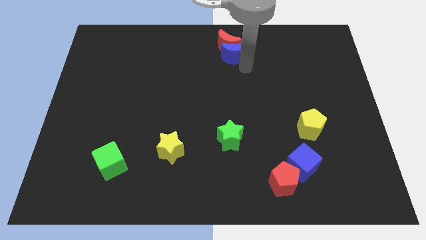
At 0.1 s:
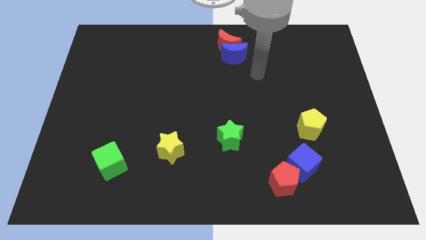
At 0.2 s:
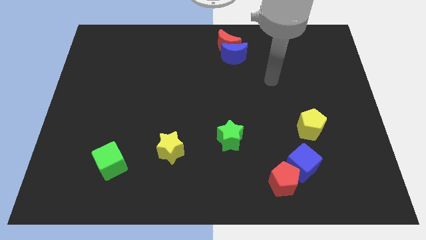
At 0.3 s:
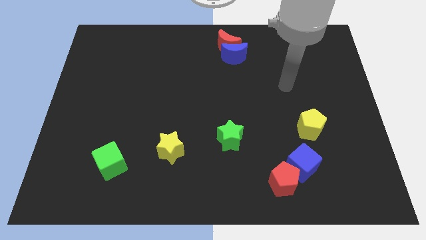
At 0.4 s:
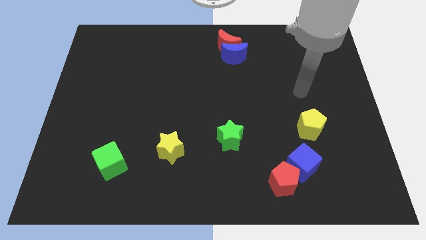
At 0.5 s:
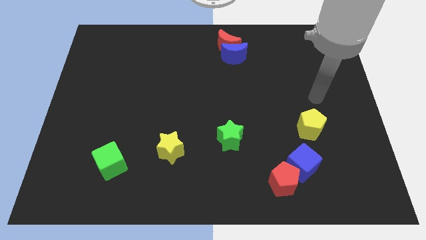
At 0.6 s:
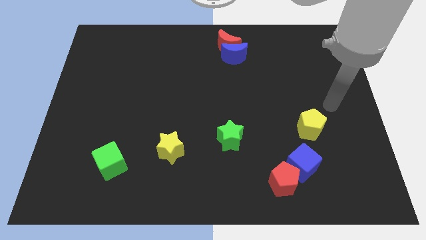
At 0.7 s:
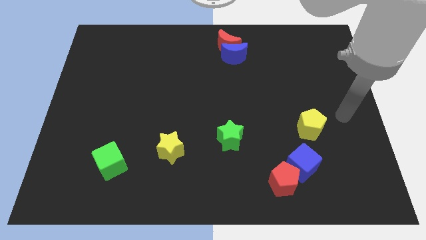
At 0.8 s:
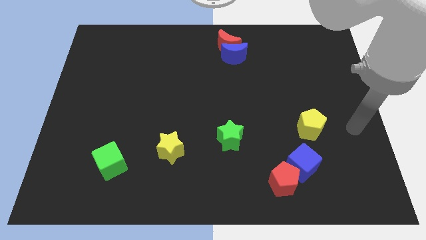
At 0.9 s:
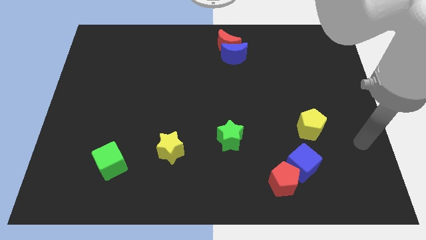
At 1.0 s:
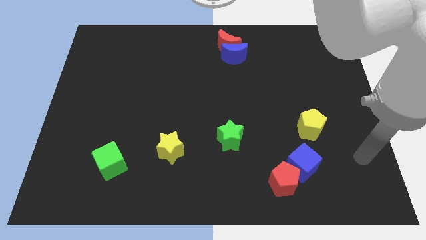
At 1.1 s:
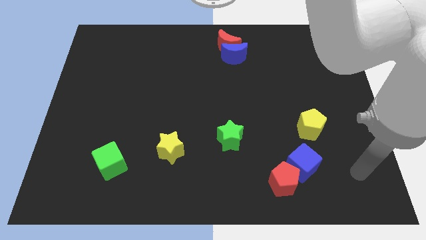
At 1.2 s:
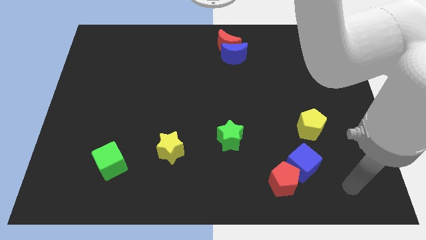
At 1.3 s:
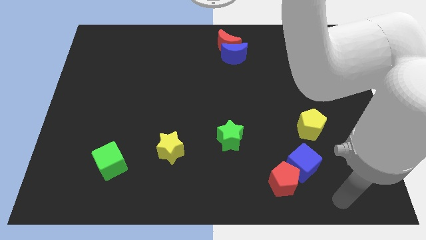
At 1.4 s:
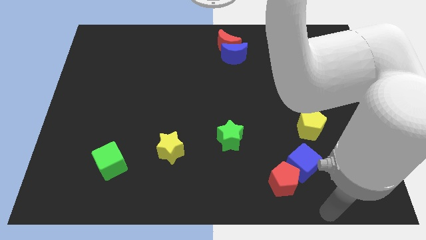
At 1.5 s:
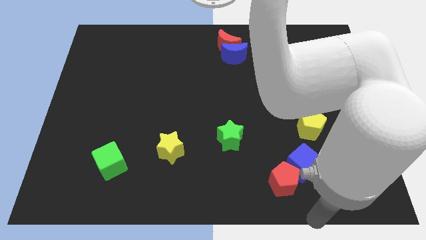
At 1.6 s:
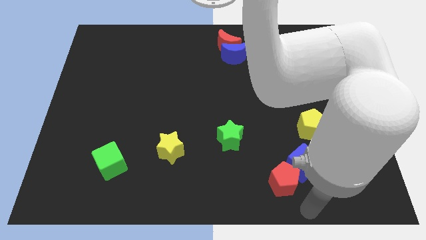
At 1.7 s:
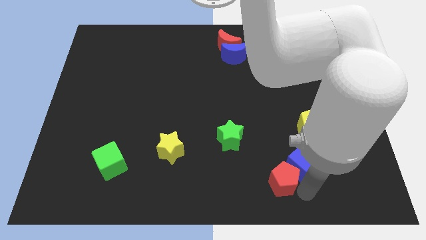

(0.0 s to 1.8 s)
place your arm at the bottom of the blue cube

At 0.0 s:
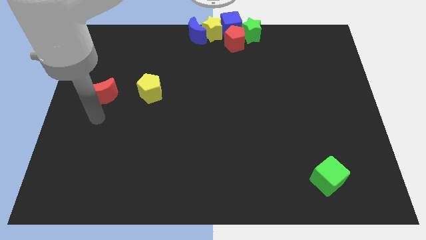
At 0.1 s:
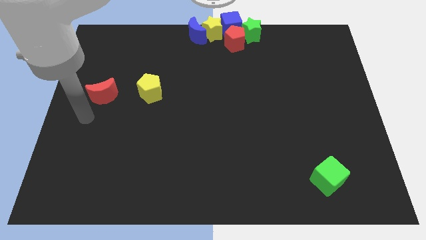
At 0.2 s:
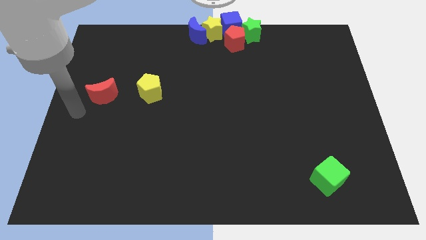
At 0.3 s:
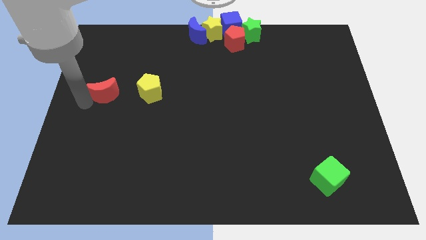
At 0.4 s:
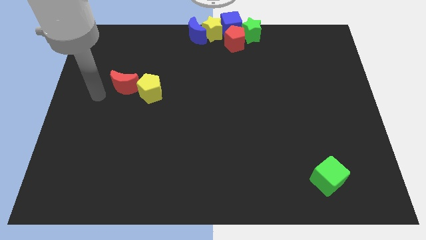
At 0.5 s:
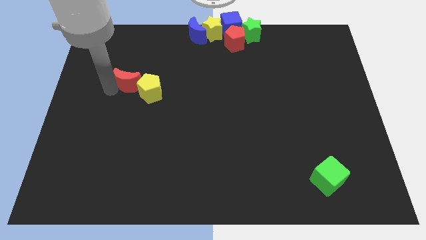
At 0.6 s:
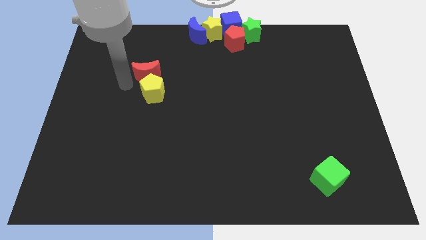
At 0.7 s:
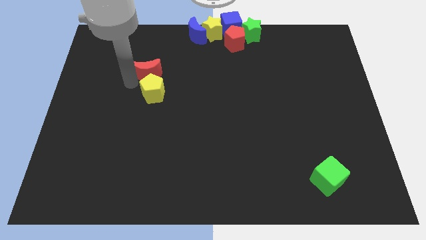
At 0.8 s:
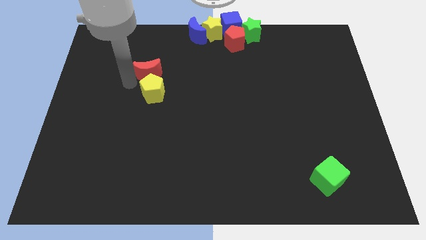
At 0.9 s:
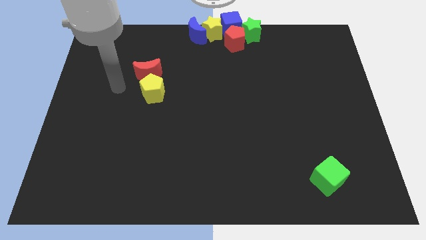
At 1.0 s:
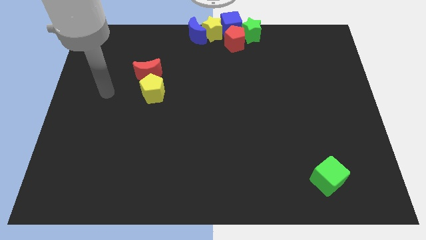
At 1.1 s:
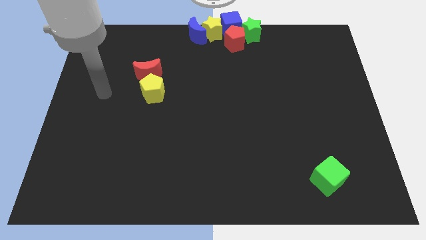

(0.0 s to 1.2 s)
place the red crescent above the yellow pentagon

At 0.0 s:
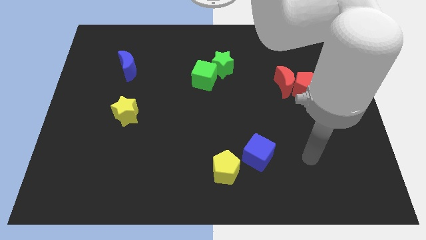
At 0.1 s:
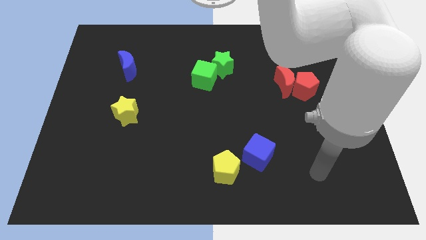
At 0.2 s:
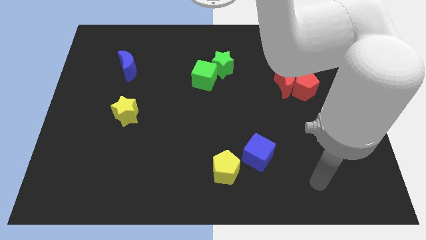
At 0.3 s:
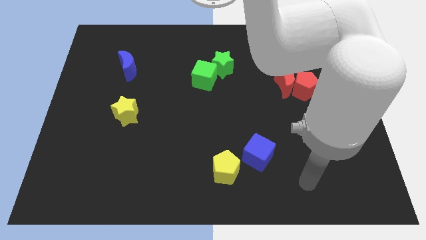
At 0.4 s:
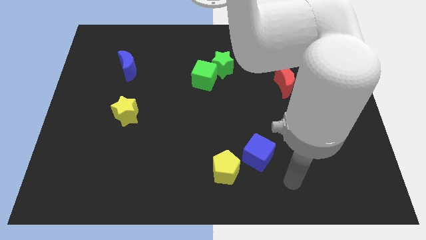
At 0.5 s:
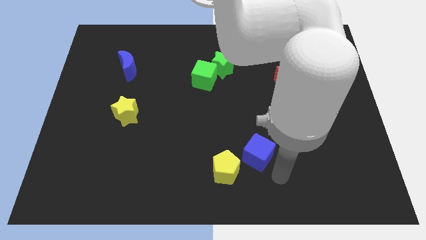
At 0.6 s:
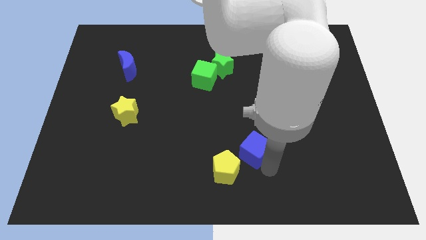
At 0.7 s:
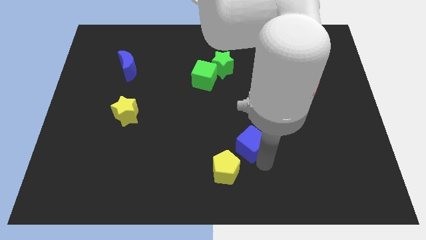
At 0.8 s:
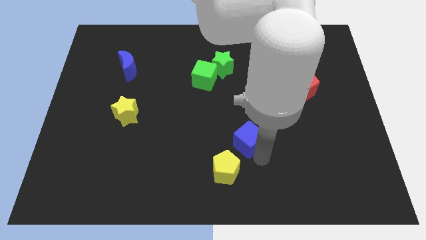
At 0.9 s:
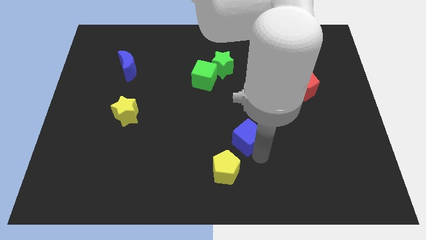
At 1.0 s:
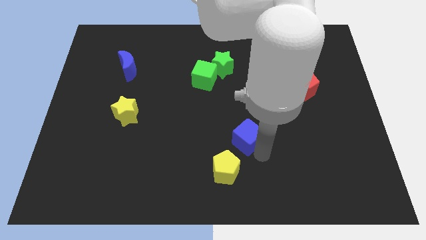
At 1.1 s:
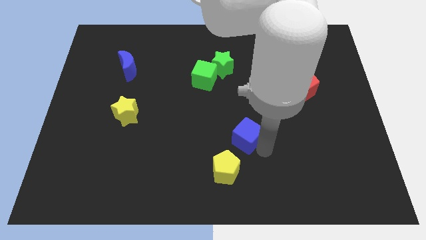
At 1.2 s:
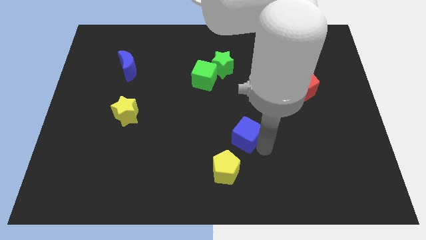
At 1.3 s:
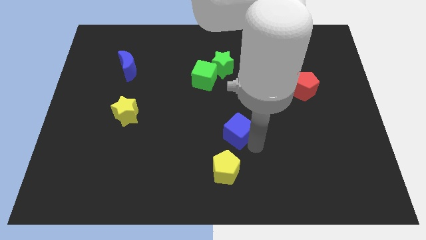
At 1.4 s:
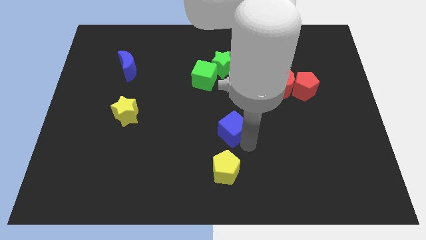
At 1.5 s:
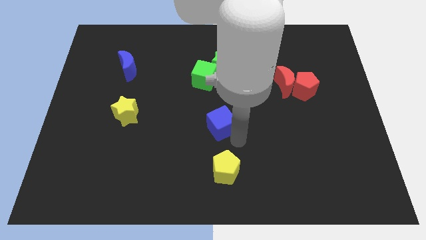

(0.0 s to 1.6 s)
put the blue cube above the yellow pentagon

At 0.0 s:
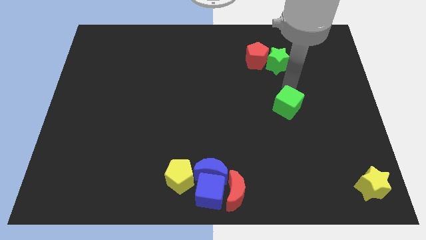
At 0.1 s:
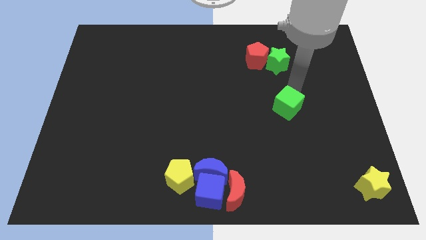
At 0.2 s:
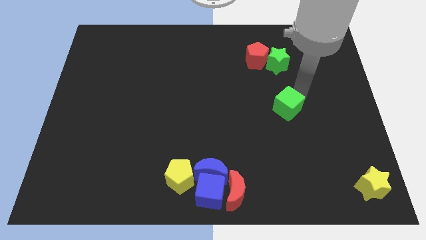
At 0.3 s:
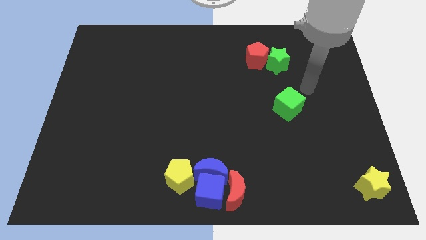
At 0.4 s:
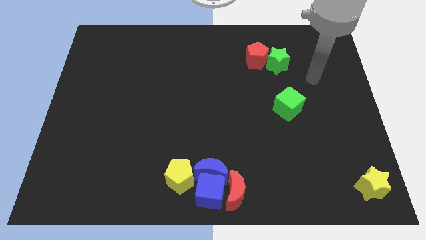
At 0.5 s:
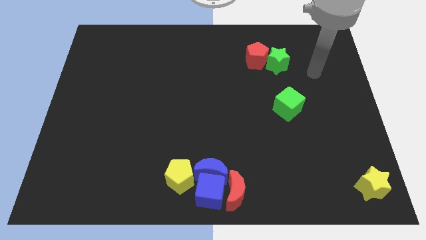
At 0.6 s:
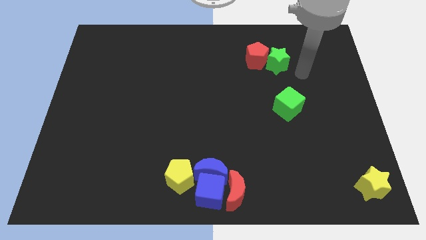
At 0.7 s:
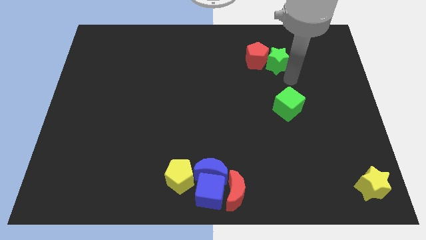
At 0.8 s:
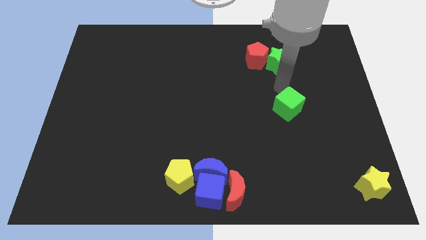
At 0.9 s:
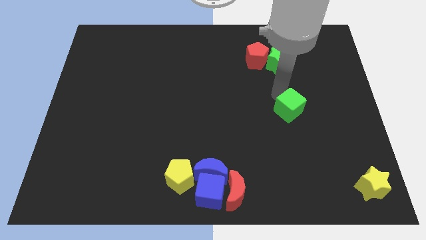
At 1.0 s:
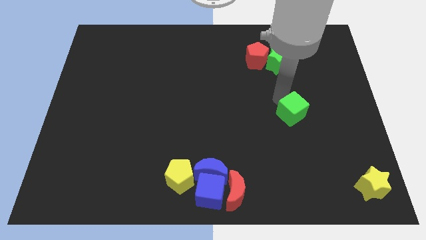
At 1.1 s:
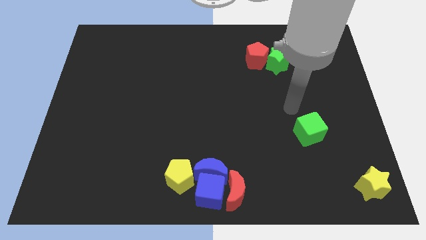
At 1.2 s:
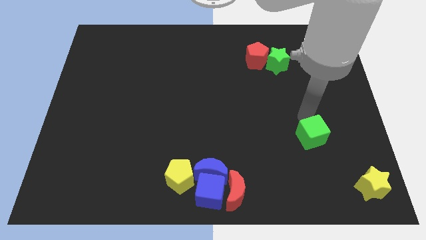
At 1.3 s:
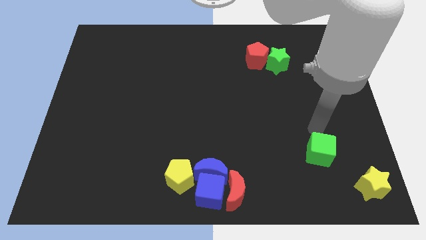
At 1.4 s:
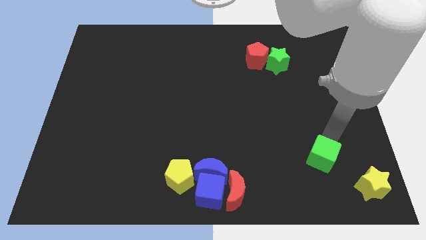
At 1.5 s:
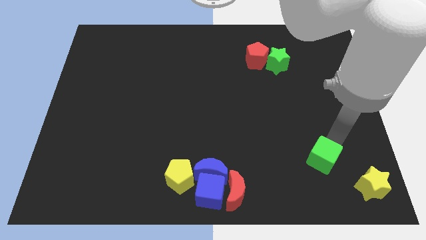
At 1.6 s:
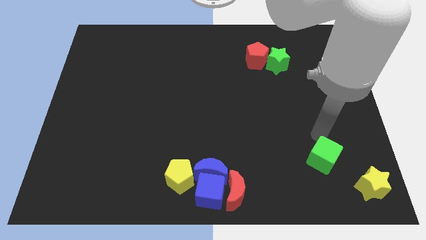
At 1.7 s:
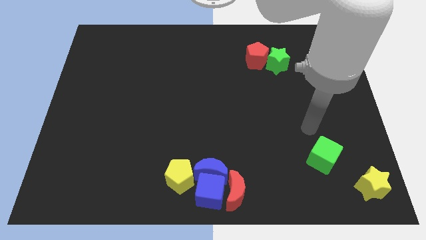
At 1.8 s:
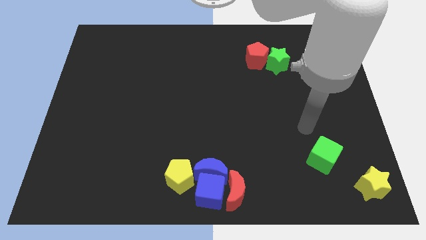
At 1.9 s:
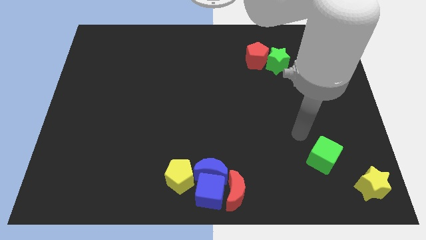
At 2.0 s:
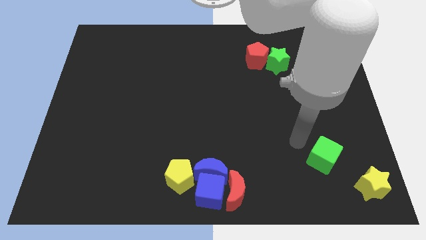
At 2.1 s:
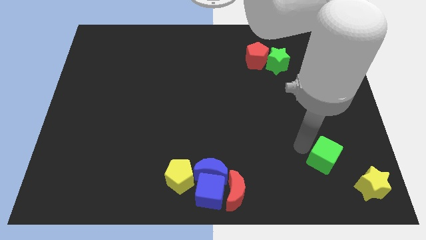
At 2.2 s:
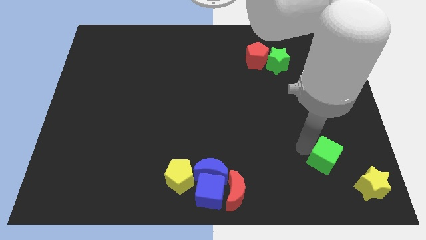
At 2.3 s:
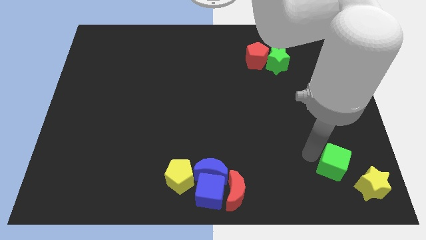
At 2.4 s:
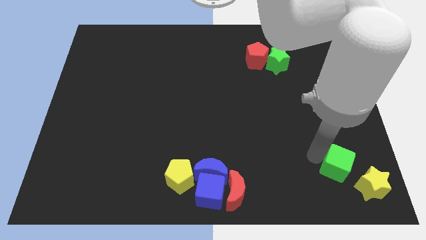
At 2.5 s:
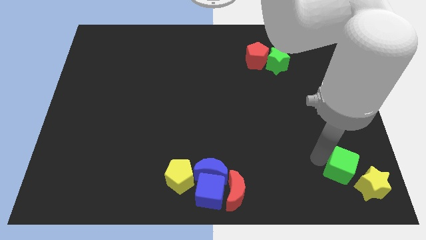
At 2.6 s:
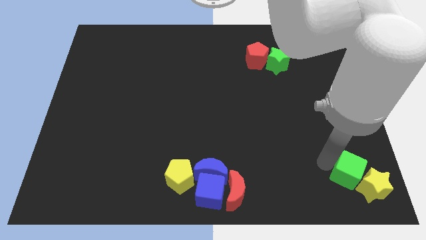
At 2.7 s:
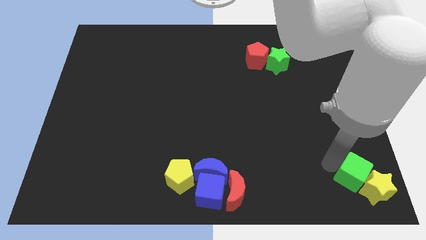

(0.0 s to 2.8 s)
push the green cube into yellow star

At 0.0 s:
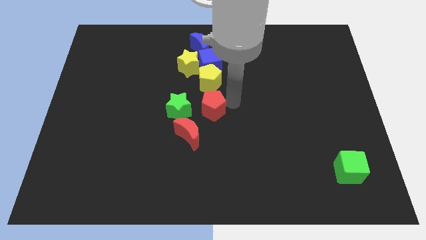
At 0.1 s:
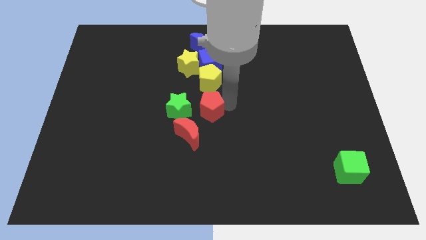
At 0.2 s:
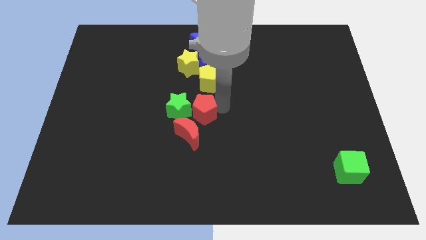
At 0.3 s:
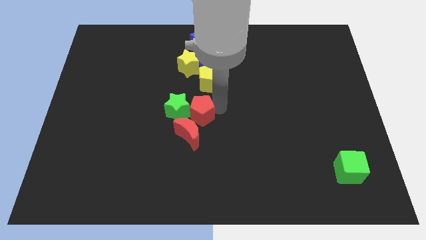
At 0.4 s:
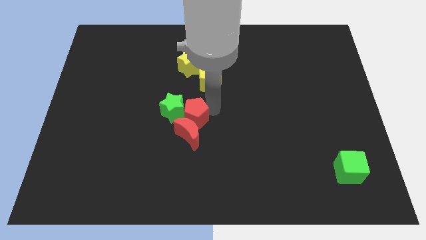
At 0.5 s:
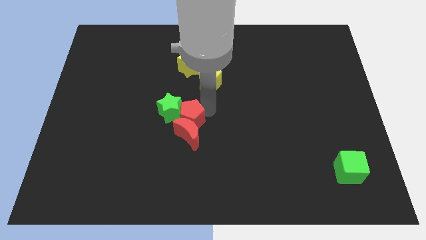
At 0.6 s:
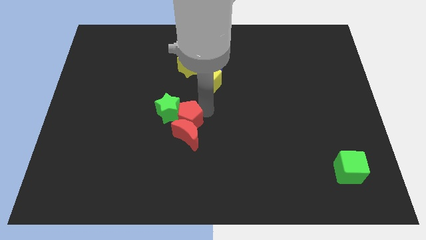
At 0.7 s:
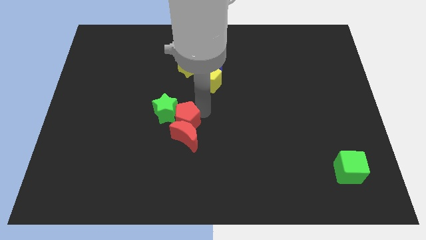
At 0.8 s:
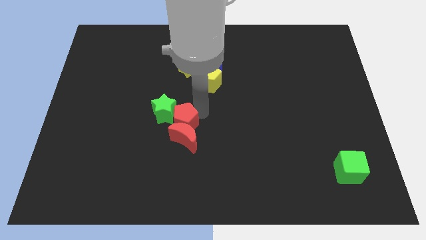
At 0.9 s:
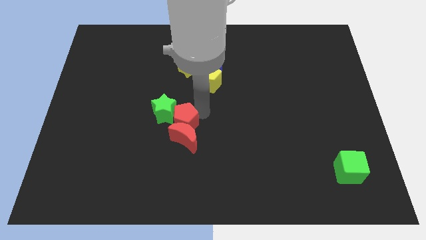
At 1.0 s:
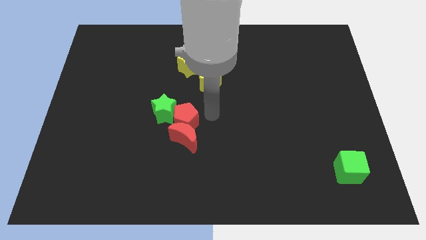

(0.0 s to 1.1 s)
push the green star and red moon with the red pentagon

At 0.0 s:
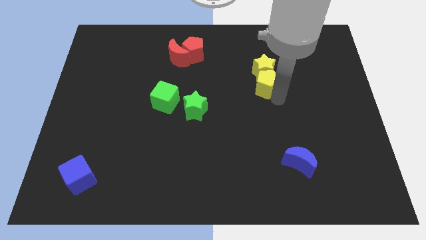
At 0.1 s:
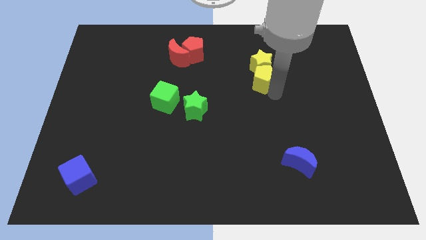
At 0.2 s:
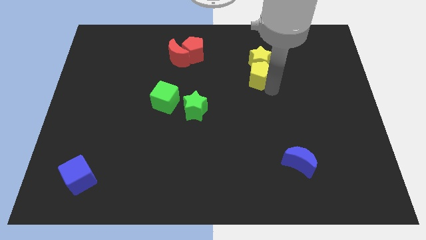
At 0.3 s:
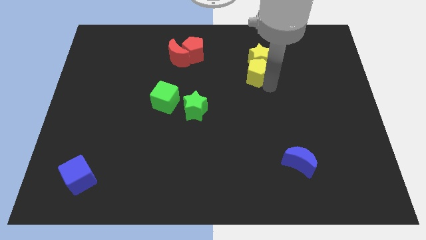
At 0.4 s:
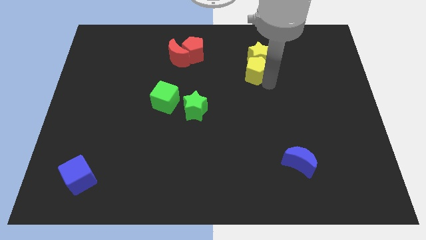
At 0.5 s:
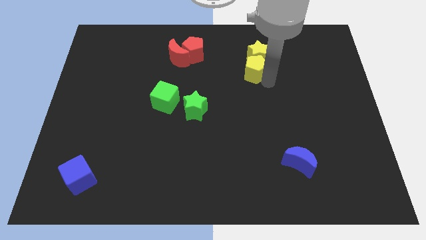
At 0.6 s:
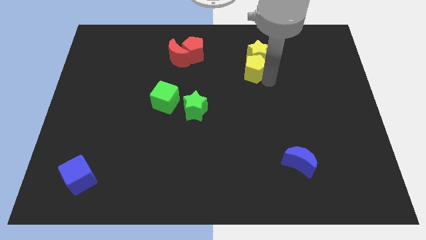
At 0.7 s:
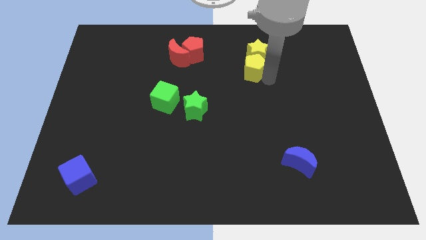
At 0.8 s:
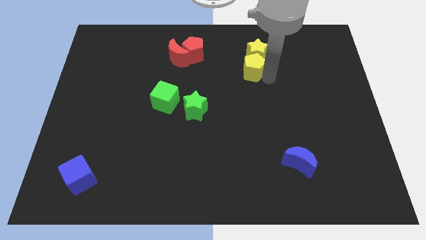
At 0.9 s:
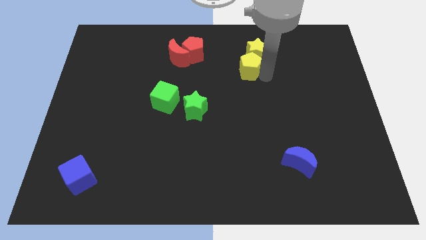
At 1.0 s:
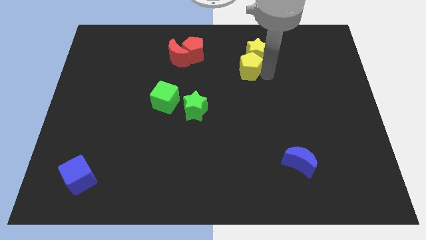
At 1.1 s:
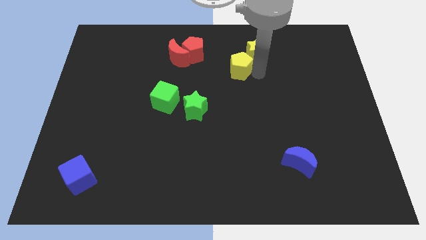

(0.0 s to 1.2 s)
move yellow blocks parallel right to the red blocks
